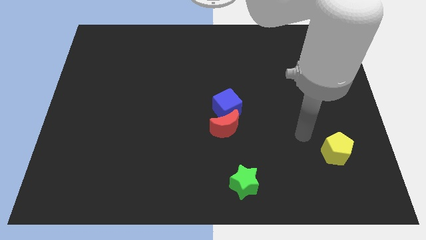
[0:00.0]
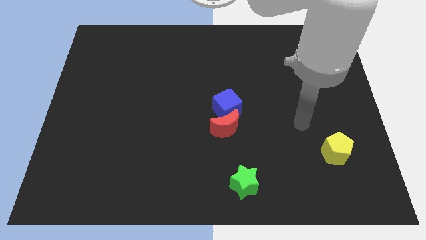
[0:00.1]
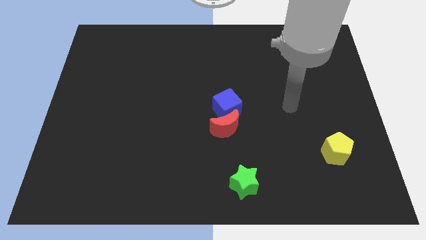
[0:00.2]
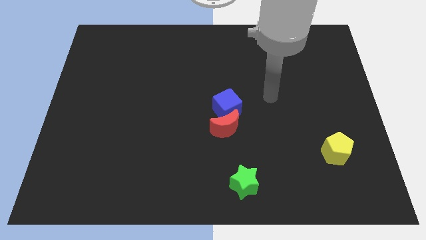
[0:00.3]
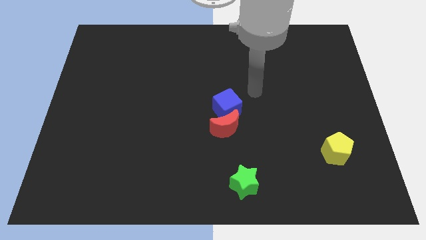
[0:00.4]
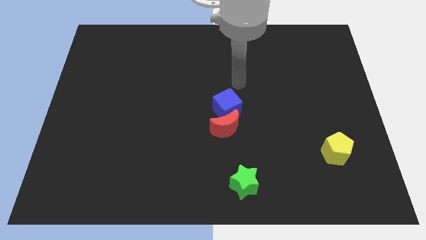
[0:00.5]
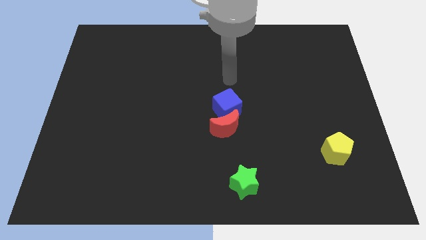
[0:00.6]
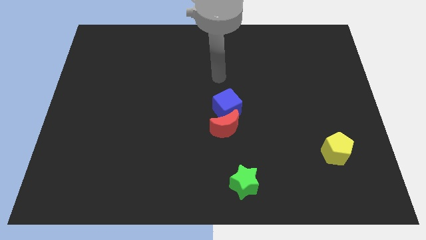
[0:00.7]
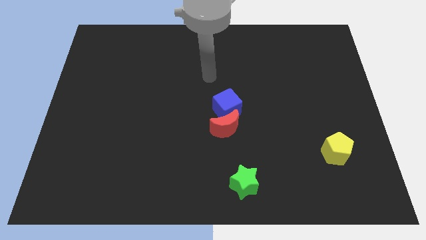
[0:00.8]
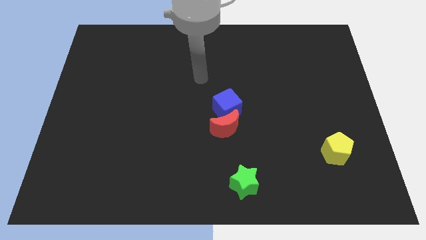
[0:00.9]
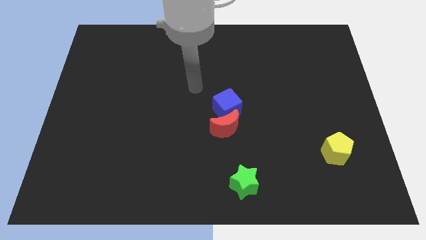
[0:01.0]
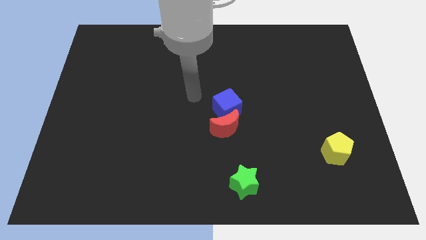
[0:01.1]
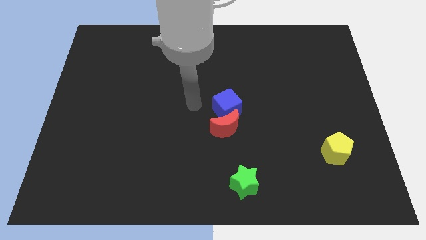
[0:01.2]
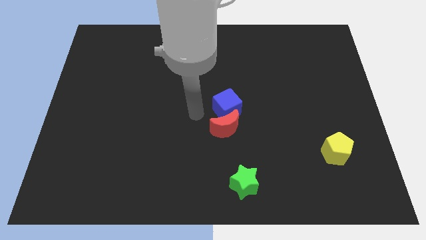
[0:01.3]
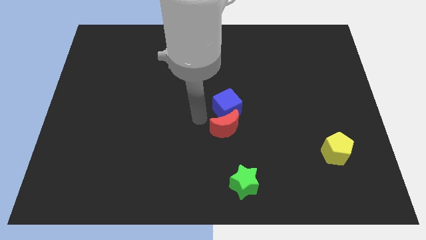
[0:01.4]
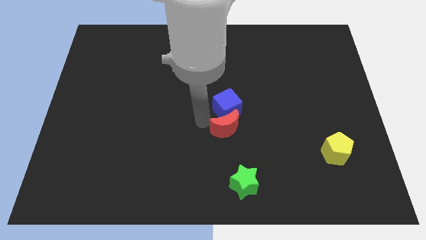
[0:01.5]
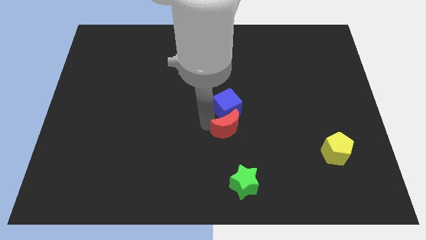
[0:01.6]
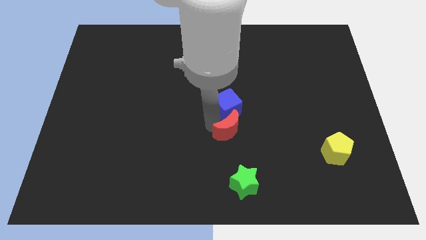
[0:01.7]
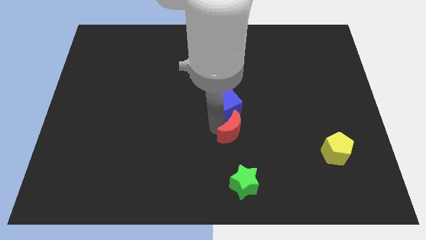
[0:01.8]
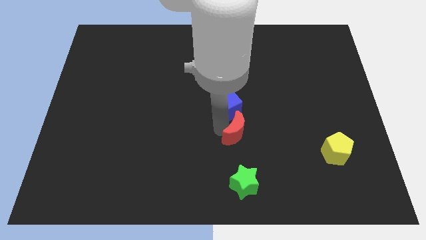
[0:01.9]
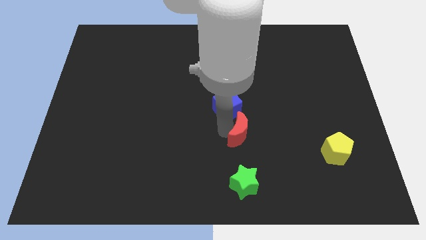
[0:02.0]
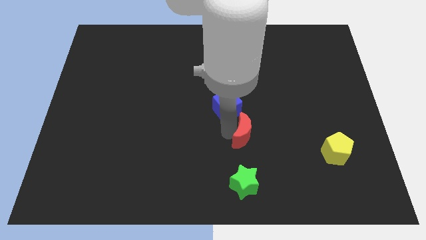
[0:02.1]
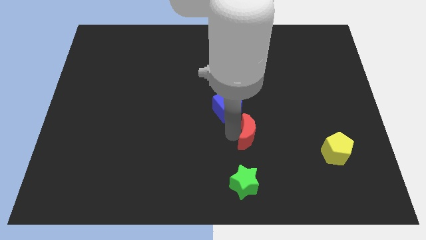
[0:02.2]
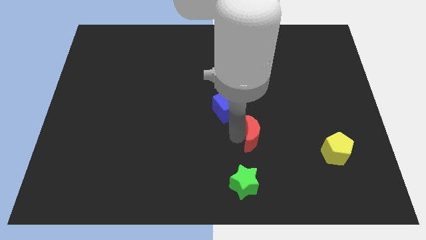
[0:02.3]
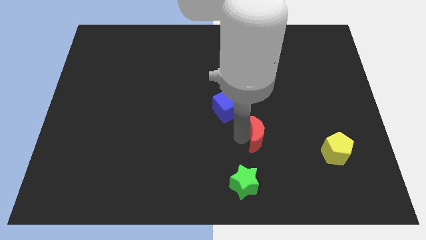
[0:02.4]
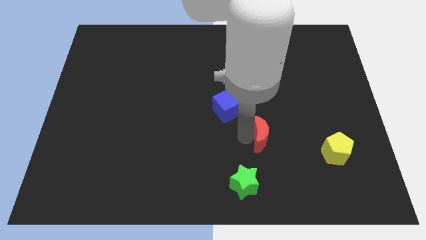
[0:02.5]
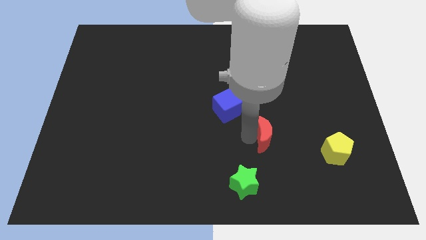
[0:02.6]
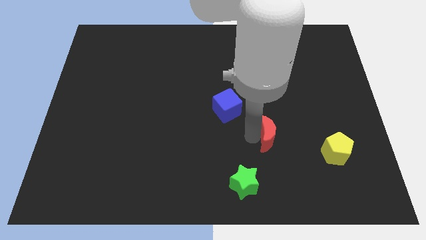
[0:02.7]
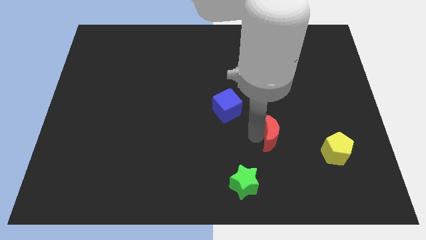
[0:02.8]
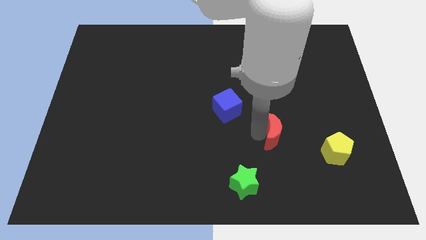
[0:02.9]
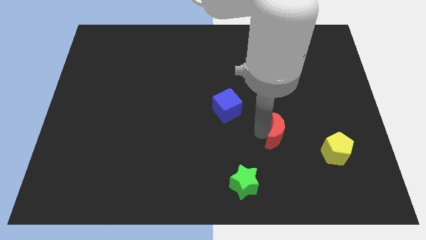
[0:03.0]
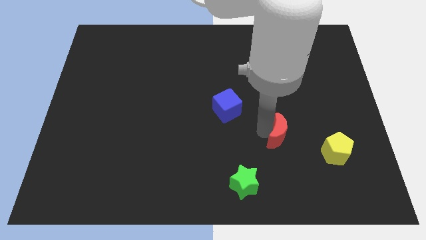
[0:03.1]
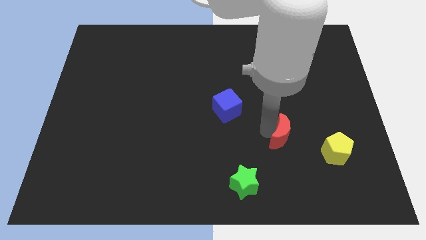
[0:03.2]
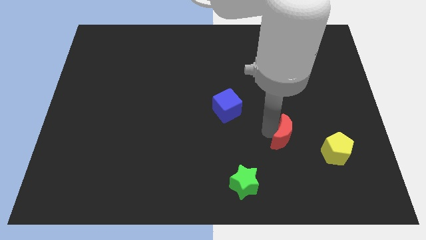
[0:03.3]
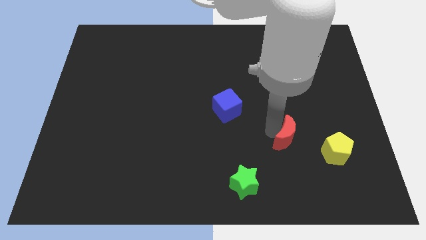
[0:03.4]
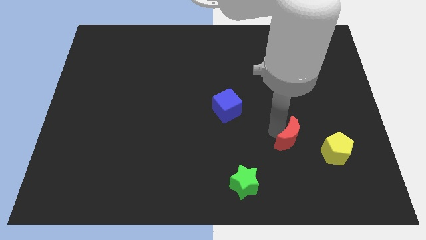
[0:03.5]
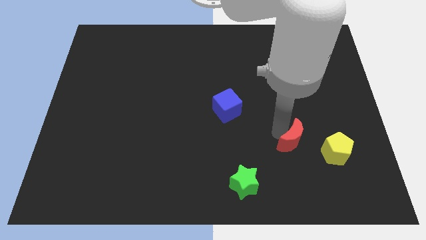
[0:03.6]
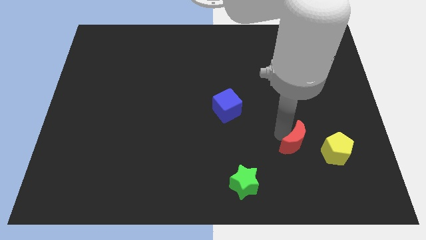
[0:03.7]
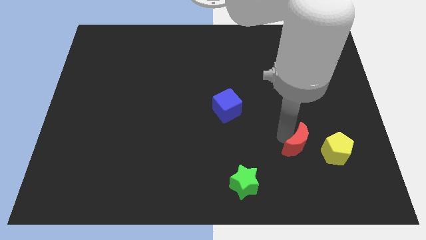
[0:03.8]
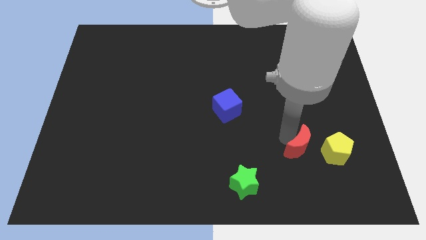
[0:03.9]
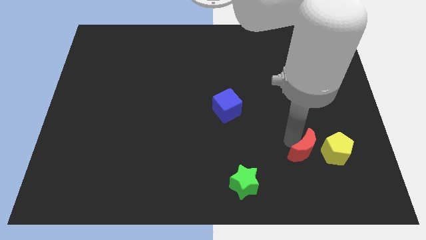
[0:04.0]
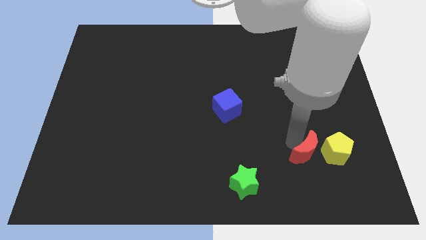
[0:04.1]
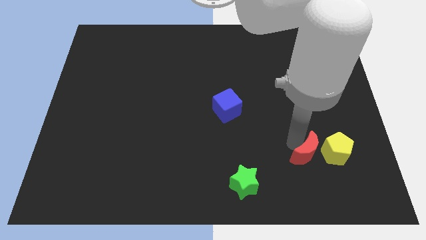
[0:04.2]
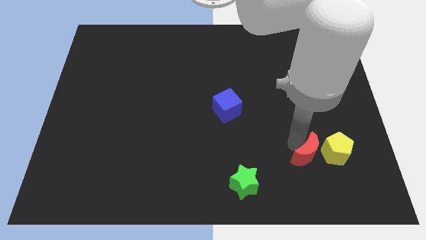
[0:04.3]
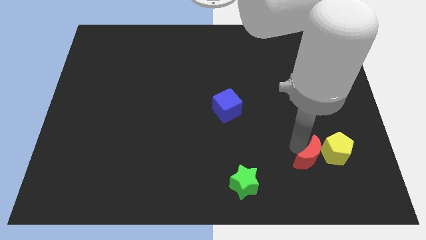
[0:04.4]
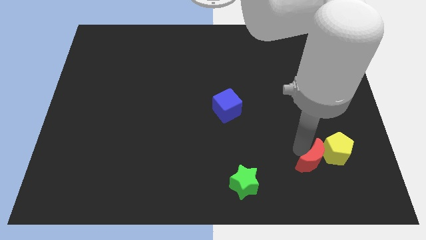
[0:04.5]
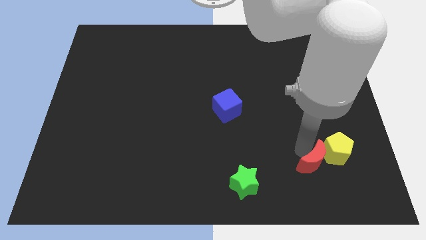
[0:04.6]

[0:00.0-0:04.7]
push the red moon to the yellow block

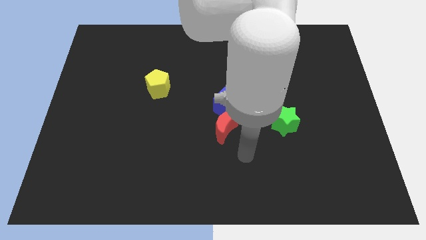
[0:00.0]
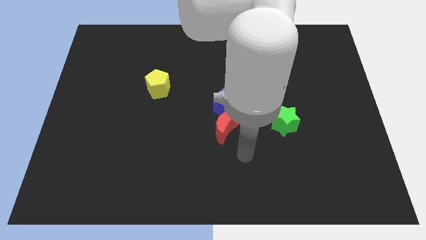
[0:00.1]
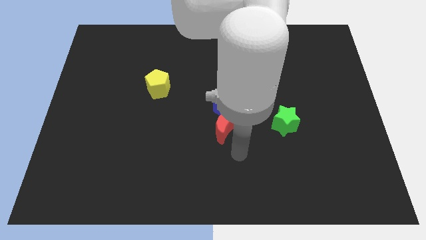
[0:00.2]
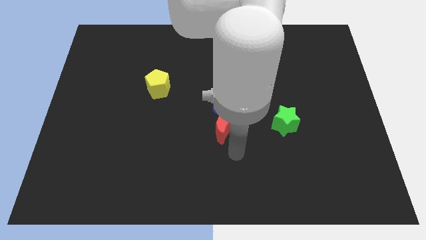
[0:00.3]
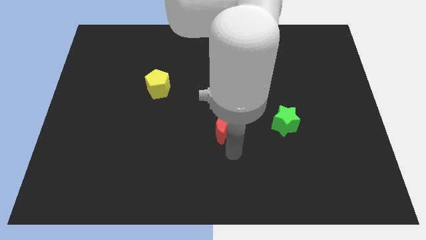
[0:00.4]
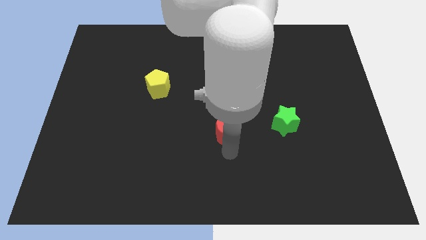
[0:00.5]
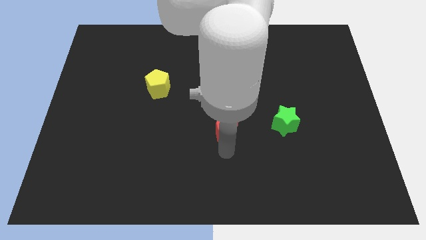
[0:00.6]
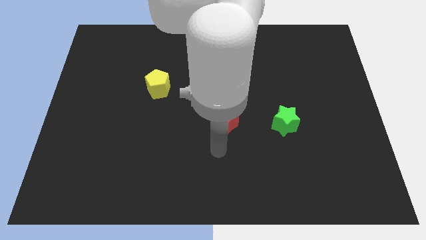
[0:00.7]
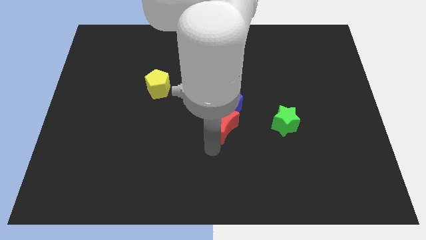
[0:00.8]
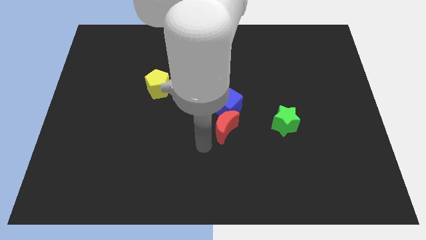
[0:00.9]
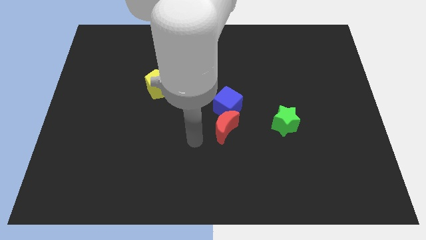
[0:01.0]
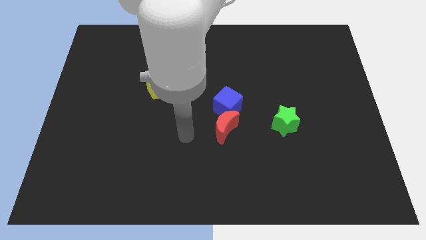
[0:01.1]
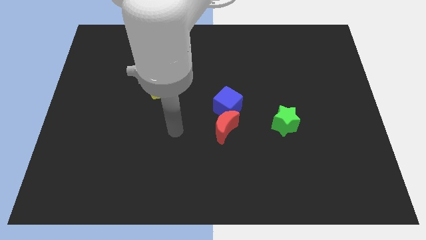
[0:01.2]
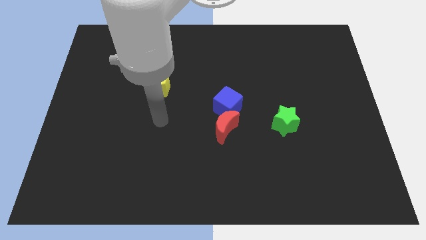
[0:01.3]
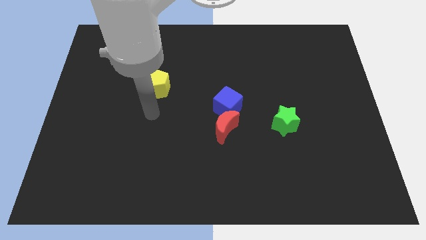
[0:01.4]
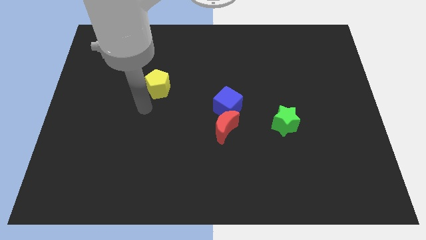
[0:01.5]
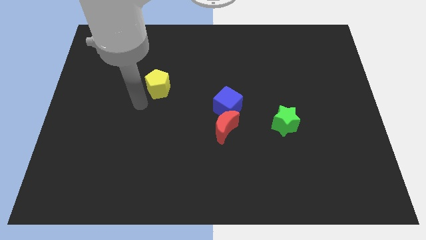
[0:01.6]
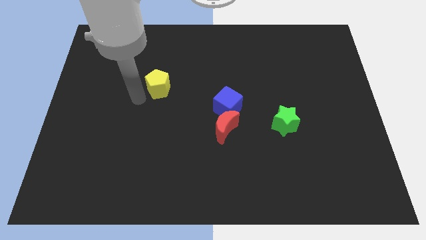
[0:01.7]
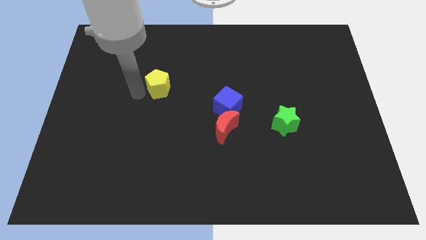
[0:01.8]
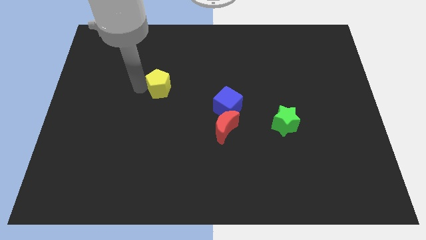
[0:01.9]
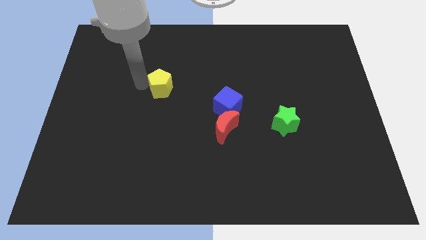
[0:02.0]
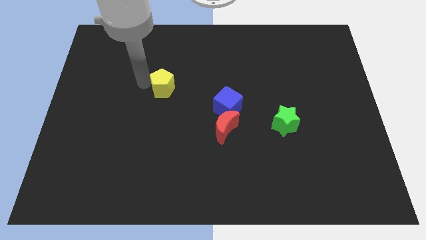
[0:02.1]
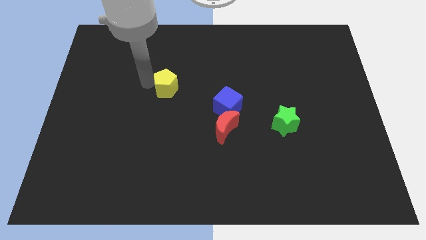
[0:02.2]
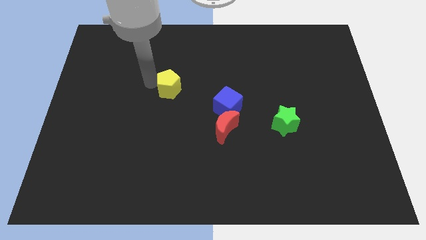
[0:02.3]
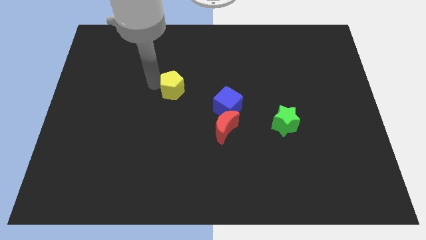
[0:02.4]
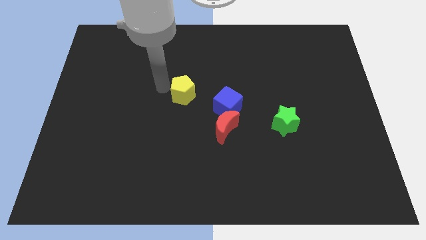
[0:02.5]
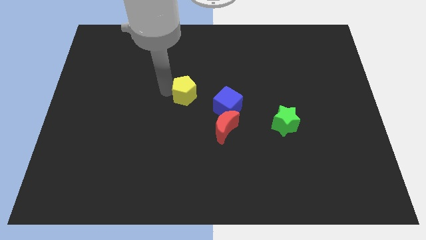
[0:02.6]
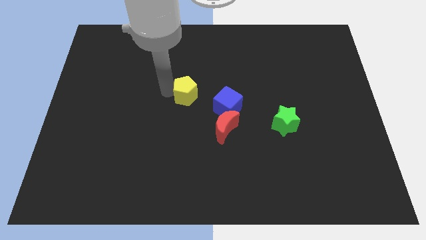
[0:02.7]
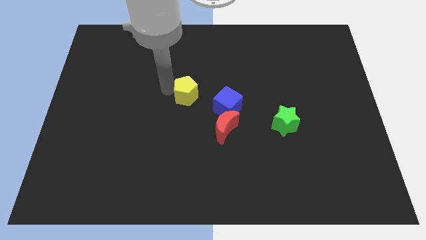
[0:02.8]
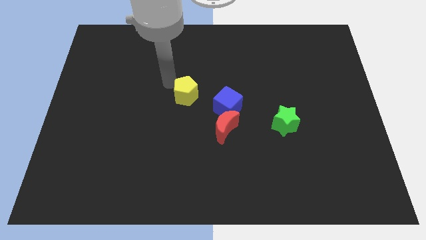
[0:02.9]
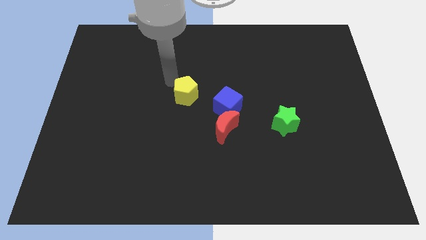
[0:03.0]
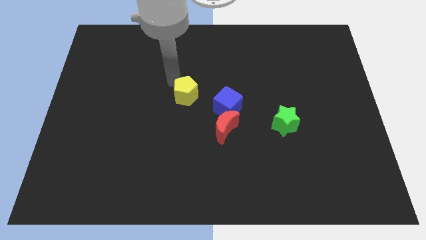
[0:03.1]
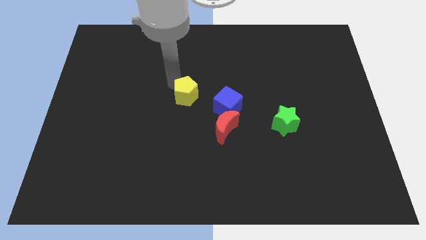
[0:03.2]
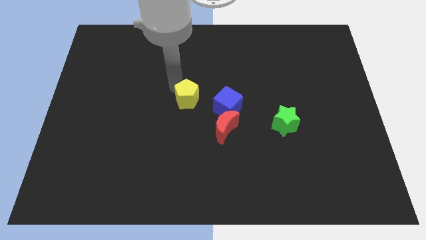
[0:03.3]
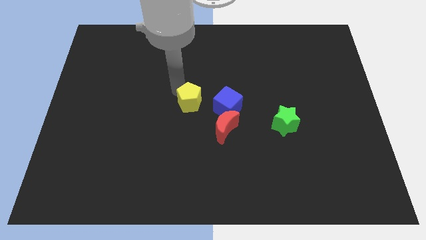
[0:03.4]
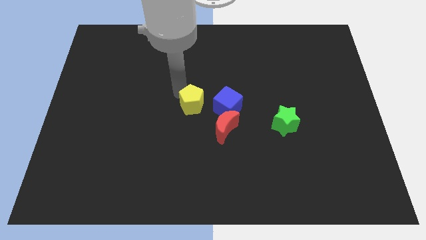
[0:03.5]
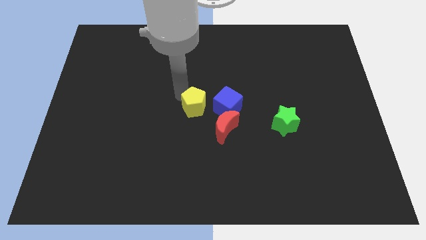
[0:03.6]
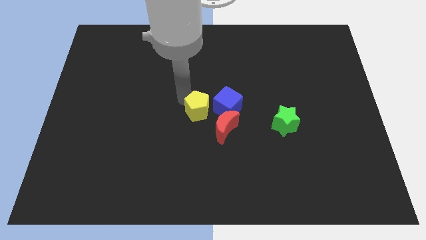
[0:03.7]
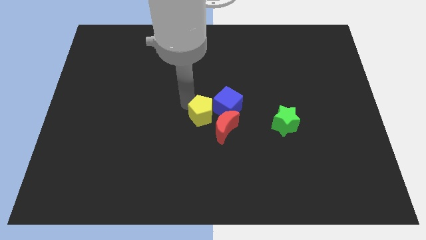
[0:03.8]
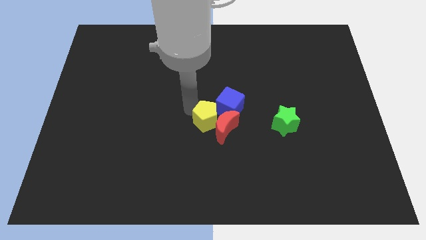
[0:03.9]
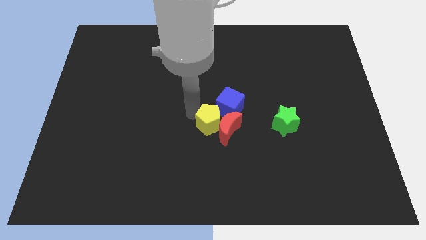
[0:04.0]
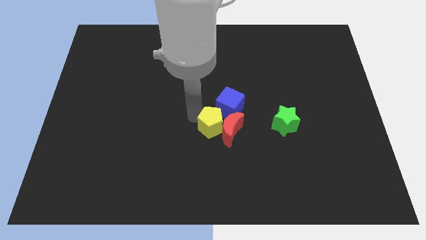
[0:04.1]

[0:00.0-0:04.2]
move the yellow block close to the red moon
